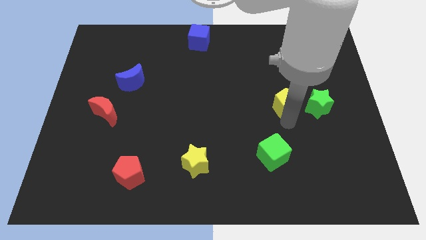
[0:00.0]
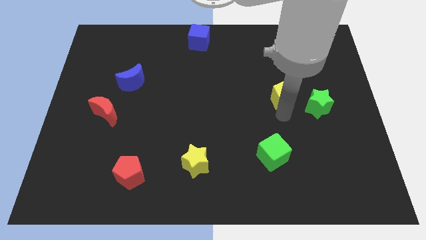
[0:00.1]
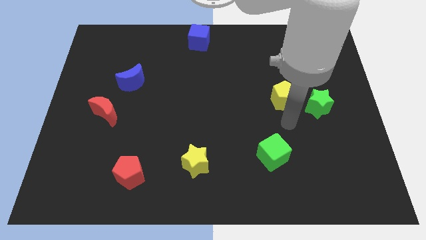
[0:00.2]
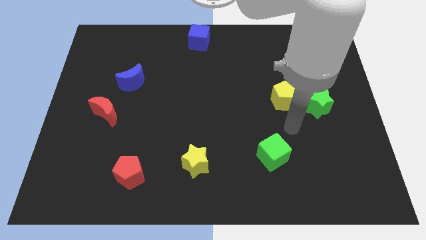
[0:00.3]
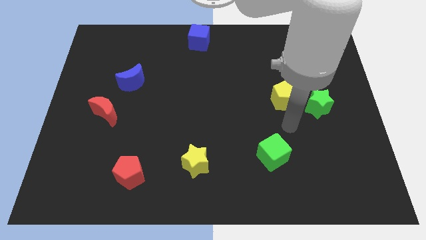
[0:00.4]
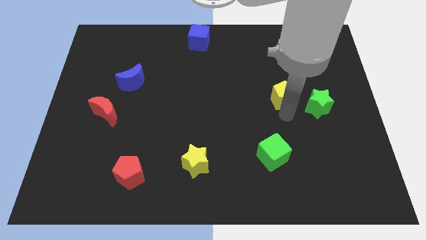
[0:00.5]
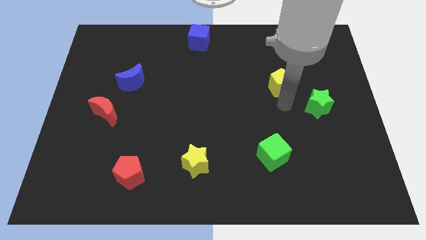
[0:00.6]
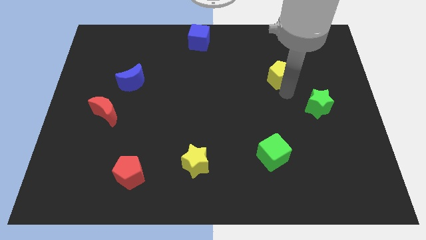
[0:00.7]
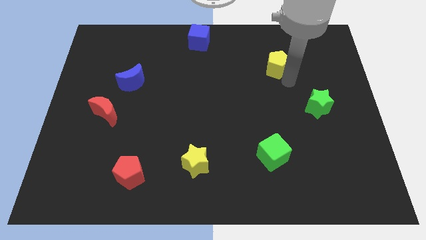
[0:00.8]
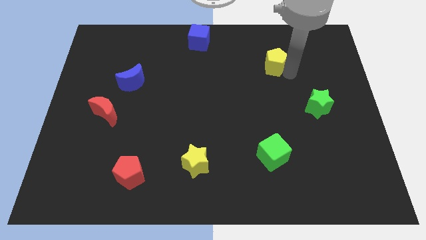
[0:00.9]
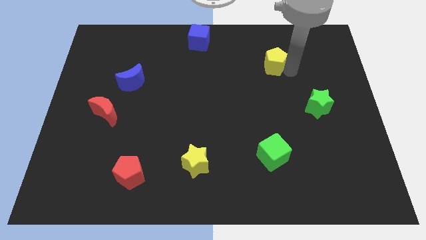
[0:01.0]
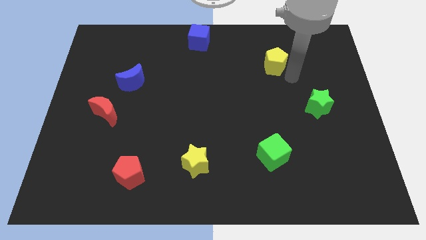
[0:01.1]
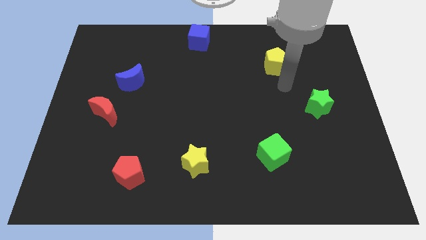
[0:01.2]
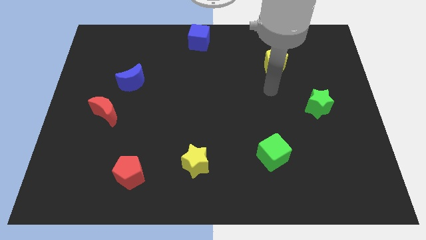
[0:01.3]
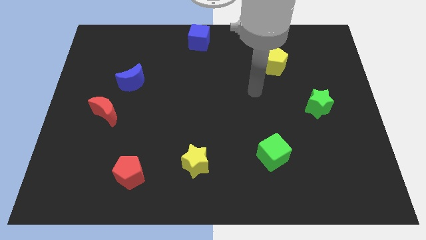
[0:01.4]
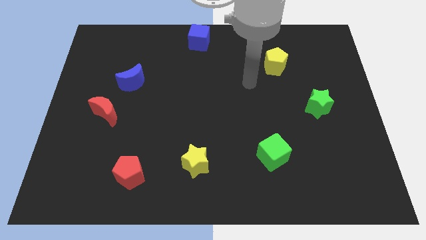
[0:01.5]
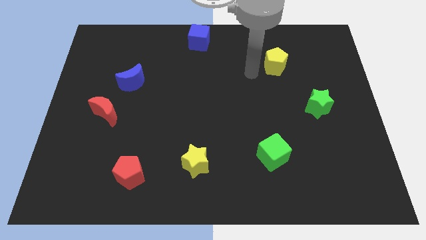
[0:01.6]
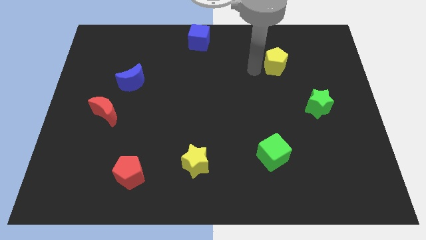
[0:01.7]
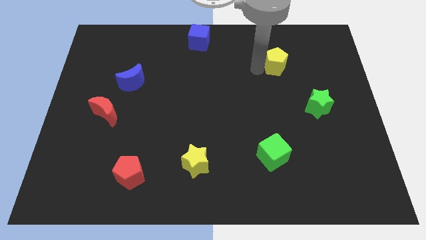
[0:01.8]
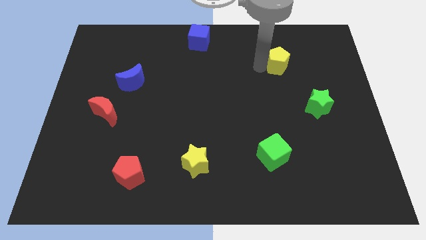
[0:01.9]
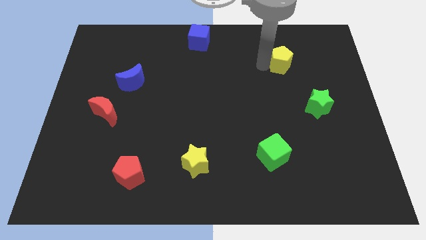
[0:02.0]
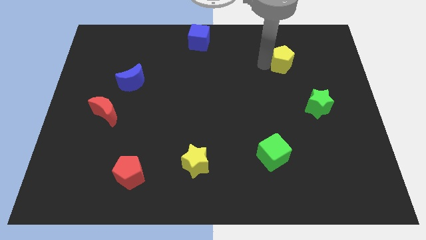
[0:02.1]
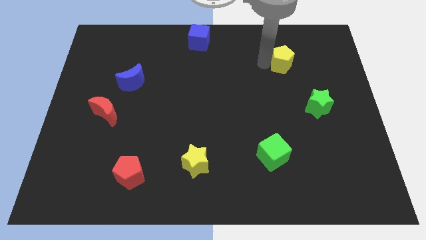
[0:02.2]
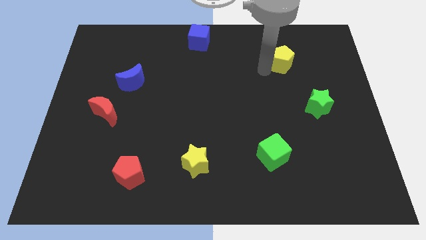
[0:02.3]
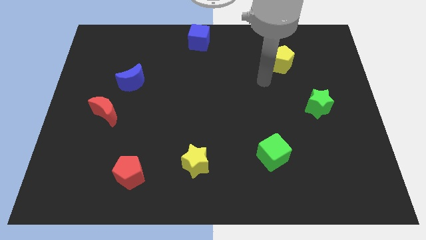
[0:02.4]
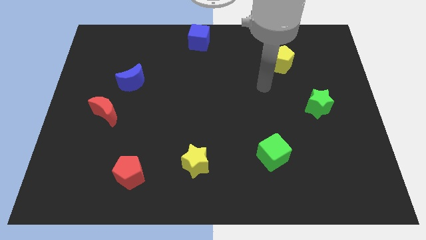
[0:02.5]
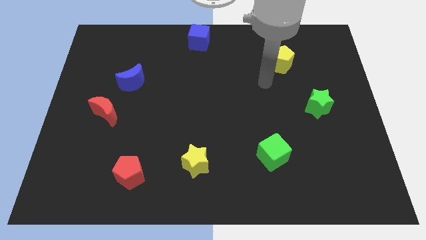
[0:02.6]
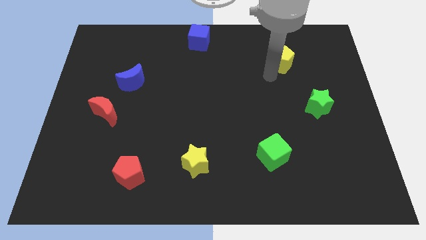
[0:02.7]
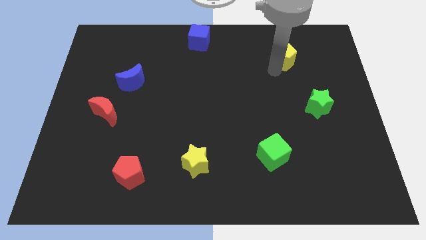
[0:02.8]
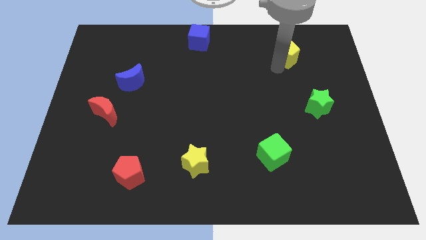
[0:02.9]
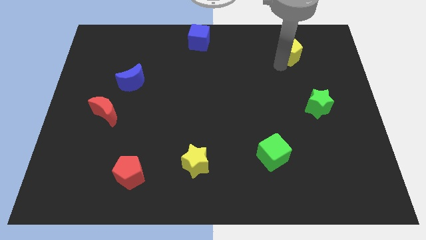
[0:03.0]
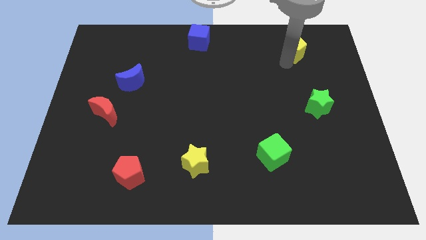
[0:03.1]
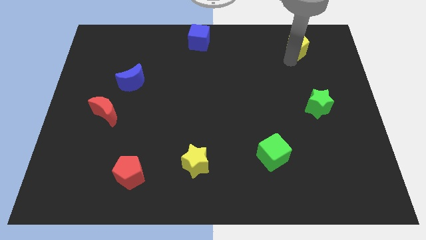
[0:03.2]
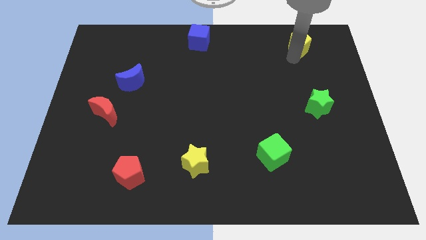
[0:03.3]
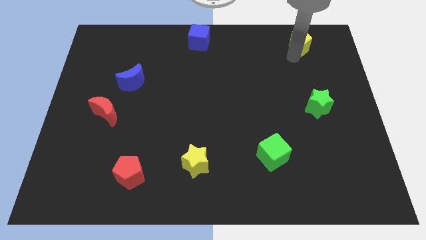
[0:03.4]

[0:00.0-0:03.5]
move the yellow pentagon to the top right of the board

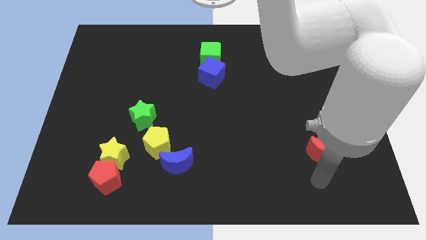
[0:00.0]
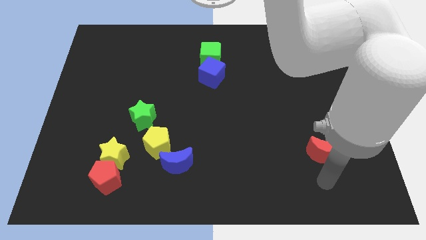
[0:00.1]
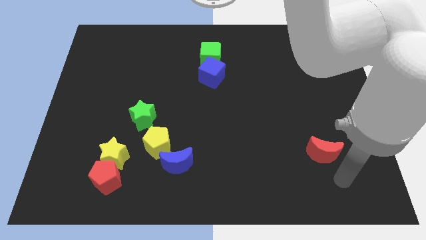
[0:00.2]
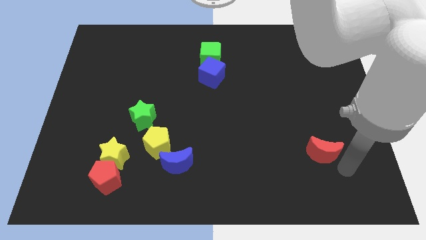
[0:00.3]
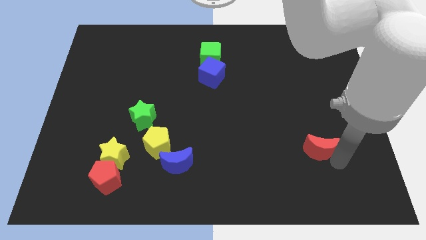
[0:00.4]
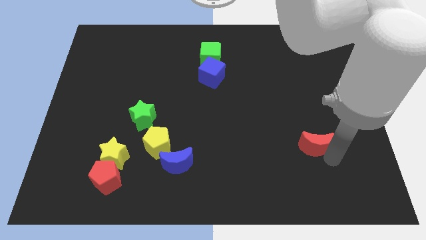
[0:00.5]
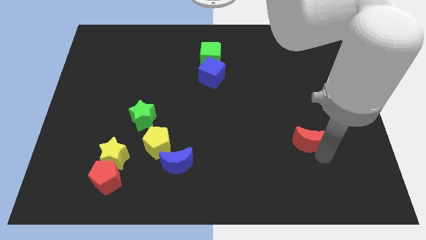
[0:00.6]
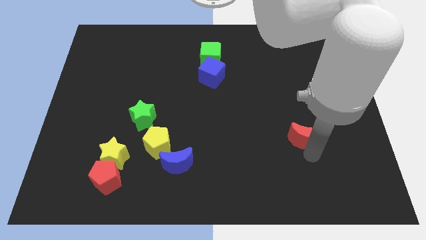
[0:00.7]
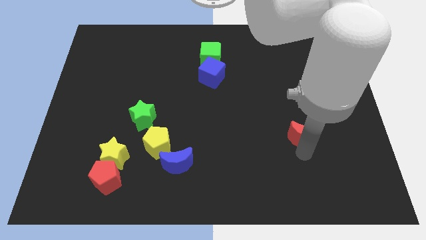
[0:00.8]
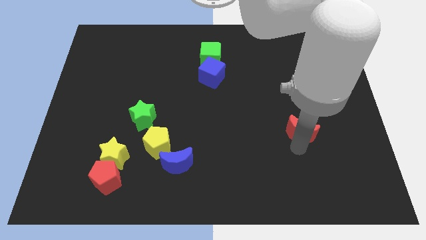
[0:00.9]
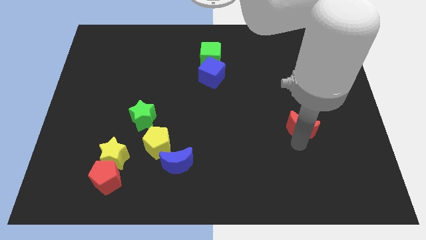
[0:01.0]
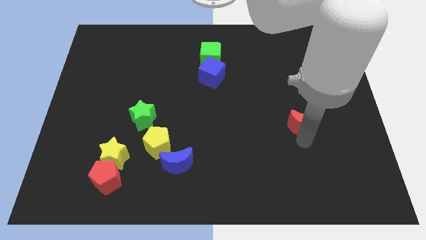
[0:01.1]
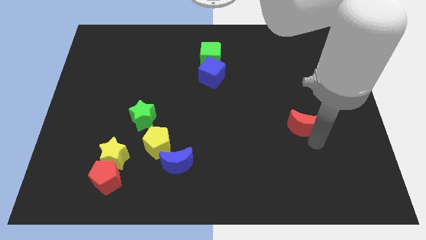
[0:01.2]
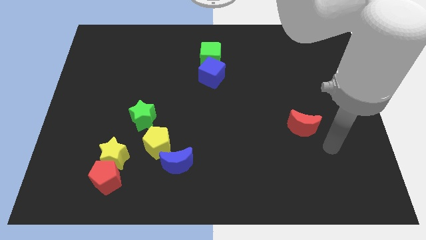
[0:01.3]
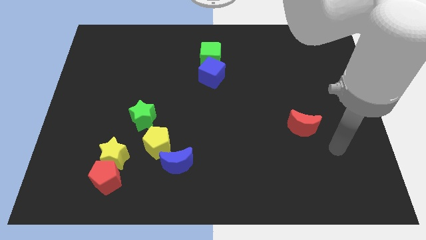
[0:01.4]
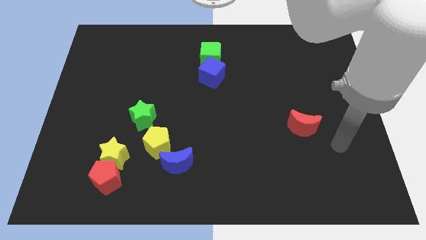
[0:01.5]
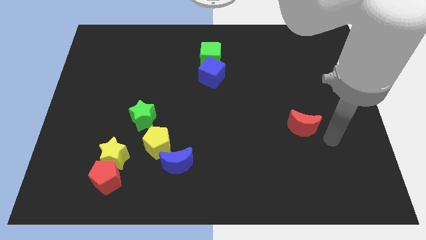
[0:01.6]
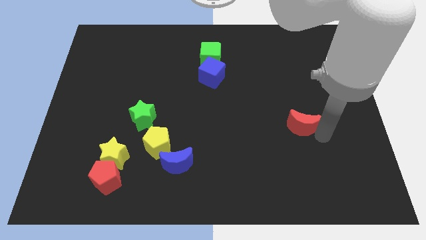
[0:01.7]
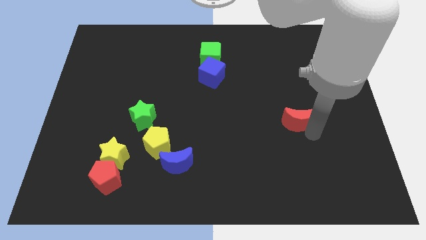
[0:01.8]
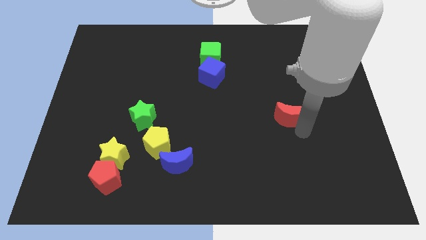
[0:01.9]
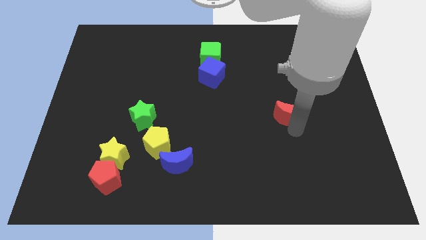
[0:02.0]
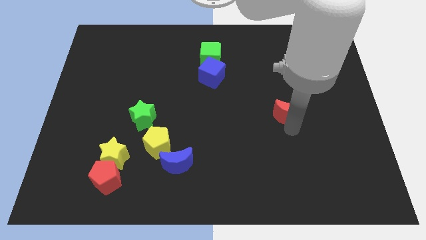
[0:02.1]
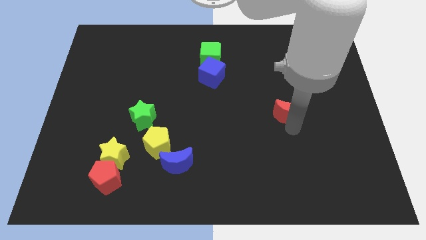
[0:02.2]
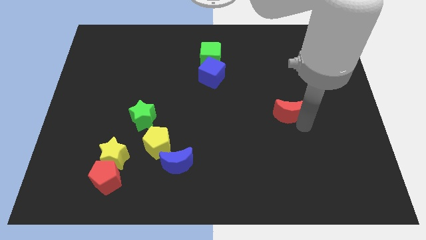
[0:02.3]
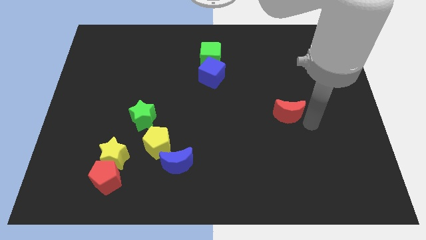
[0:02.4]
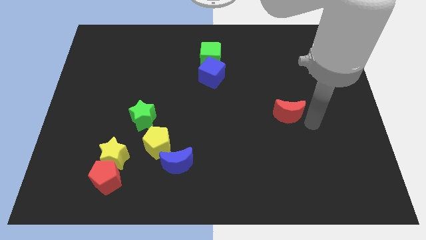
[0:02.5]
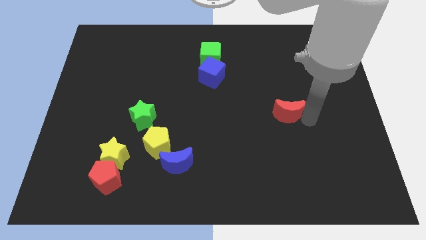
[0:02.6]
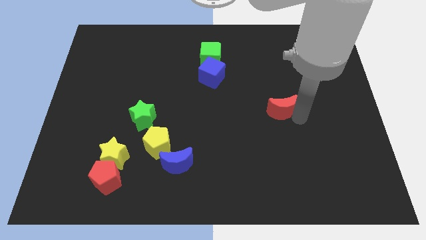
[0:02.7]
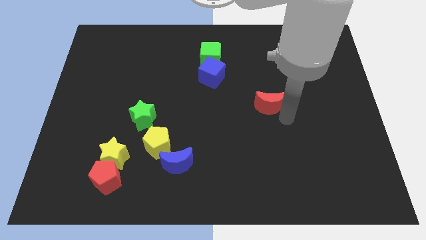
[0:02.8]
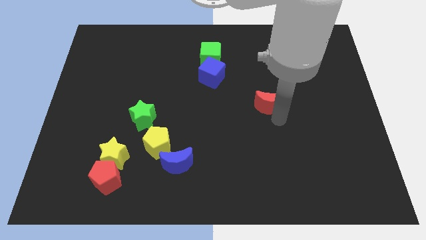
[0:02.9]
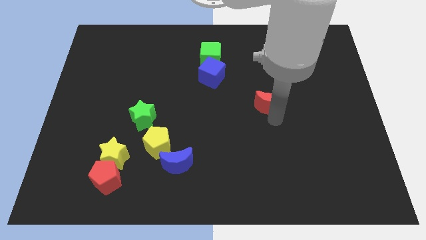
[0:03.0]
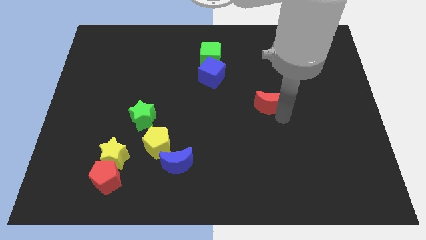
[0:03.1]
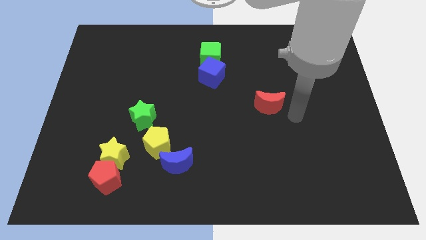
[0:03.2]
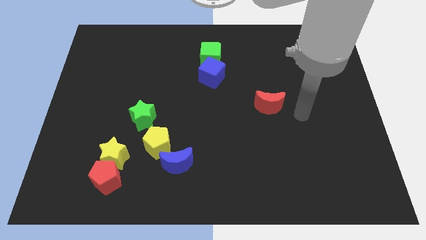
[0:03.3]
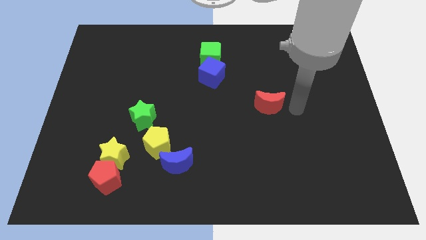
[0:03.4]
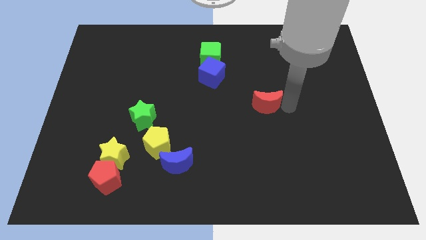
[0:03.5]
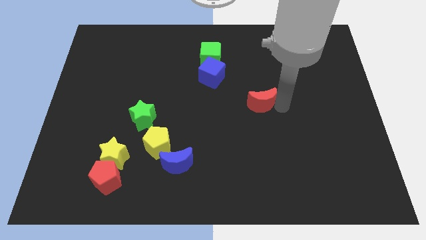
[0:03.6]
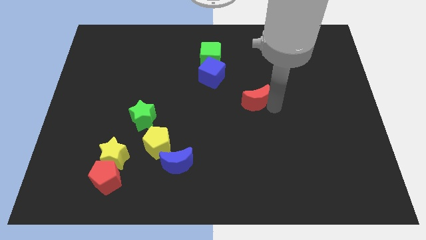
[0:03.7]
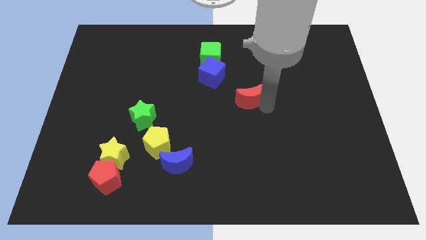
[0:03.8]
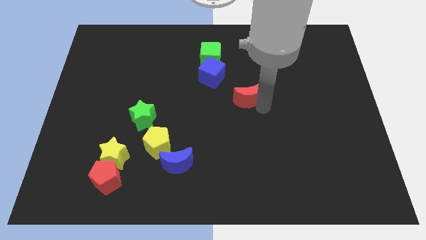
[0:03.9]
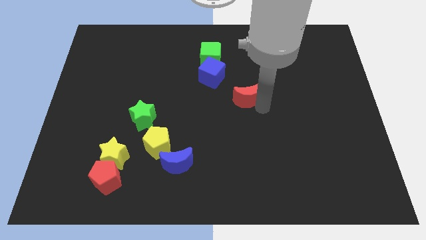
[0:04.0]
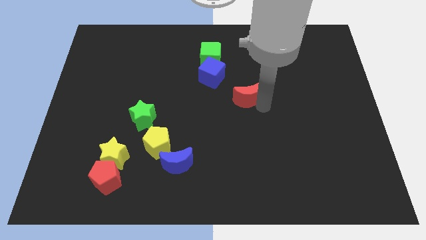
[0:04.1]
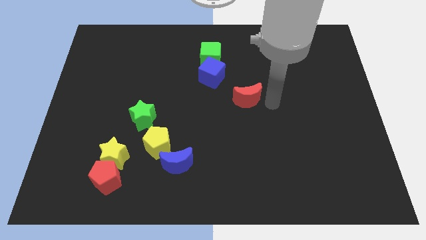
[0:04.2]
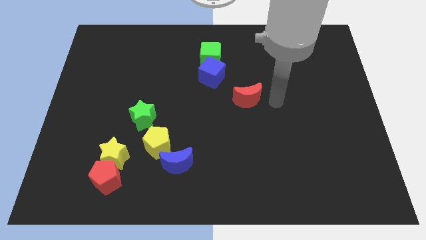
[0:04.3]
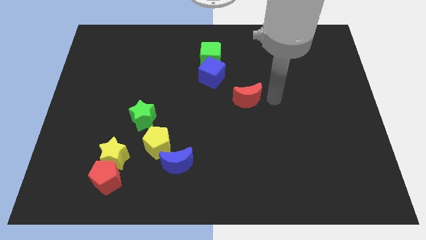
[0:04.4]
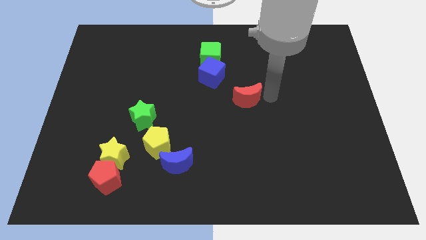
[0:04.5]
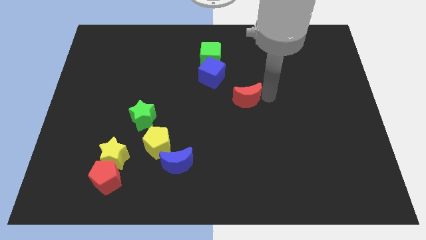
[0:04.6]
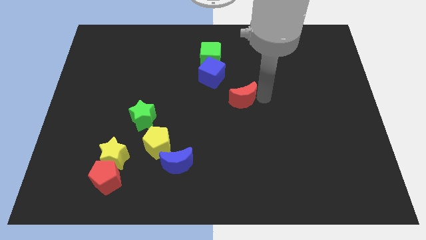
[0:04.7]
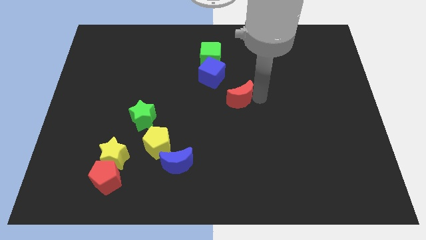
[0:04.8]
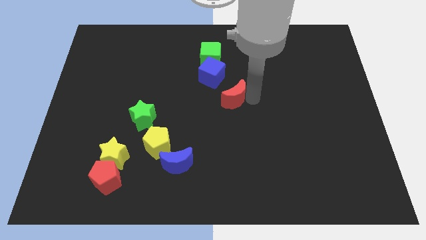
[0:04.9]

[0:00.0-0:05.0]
push the red crescent to the bottom right of the blue cube

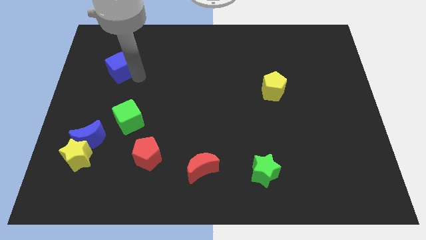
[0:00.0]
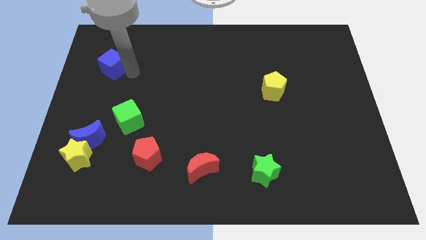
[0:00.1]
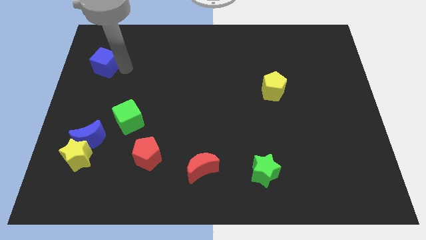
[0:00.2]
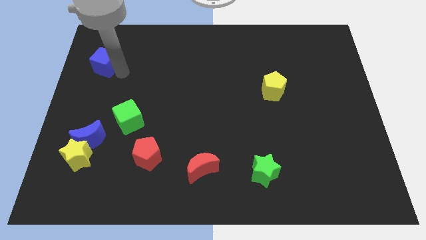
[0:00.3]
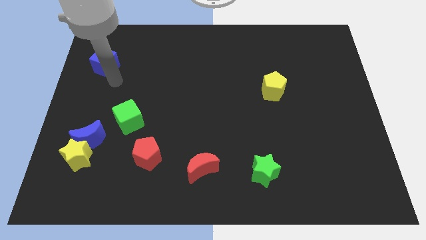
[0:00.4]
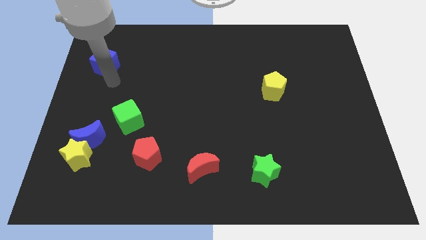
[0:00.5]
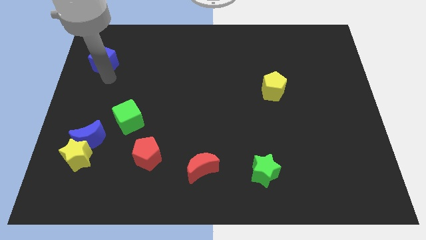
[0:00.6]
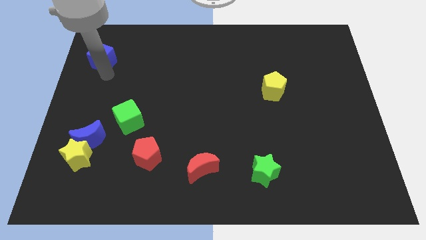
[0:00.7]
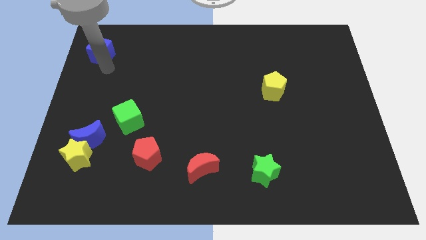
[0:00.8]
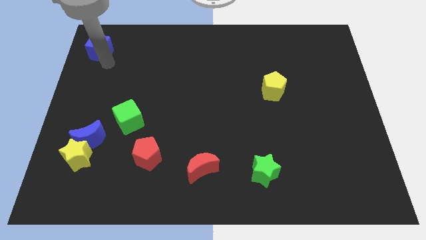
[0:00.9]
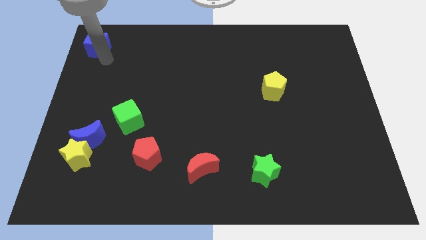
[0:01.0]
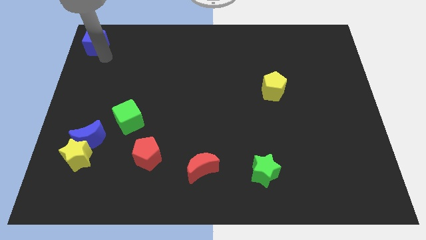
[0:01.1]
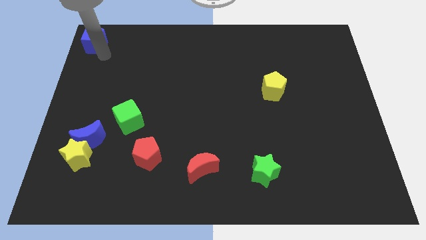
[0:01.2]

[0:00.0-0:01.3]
move blue cube to top left corner
